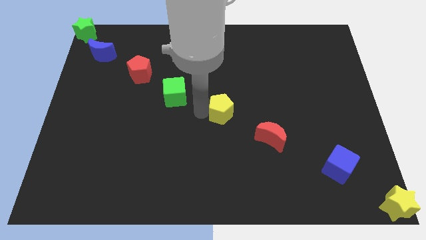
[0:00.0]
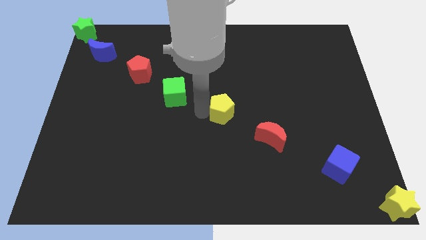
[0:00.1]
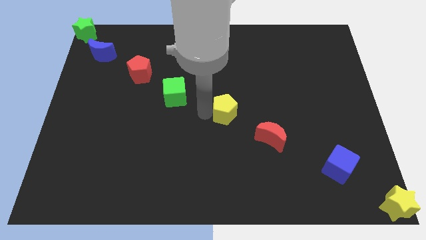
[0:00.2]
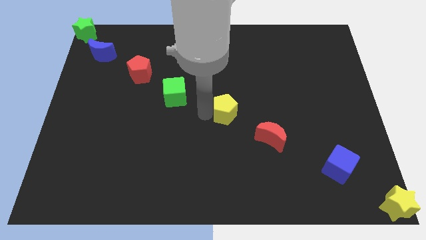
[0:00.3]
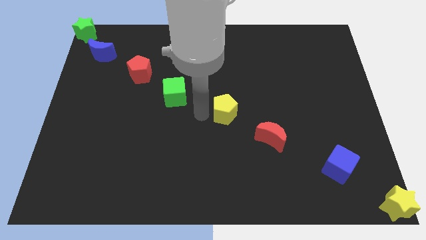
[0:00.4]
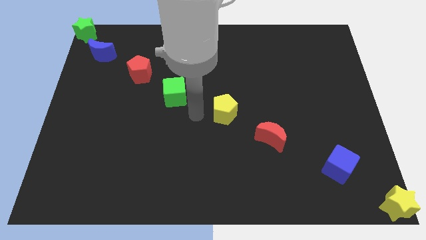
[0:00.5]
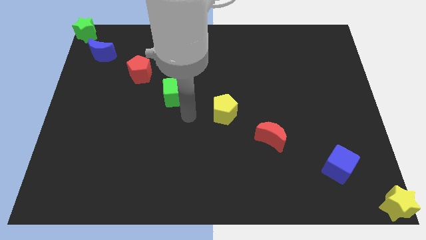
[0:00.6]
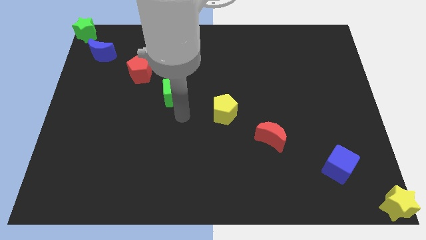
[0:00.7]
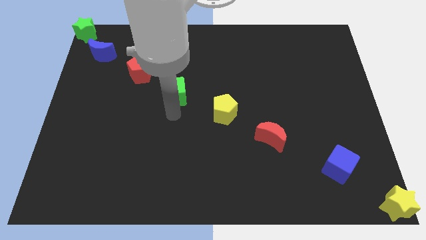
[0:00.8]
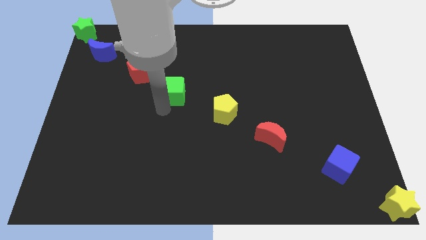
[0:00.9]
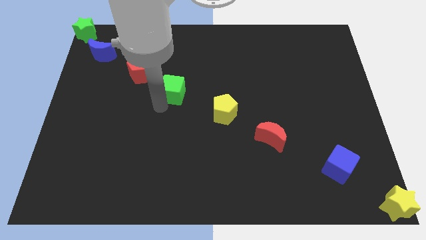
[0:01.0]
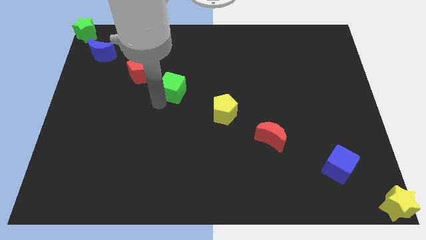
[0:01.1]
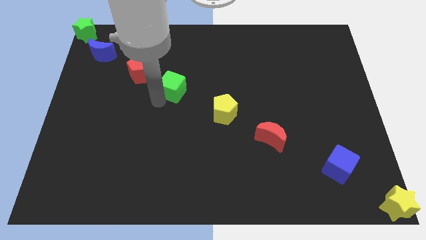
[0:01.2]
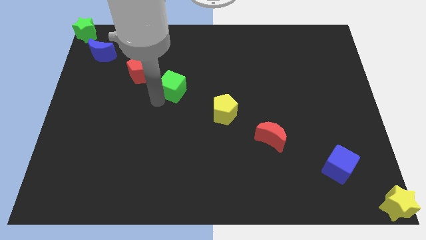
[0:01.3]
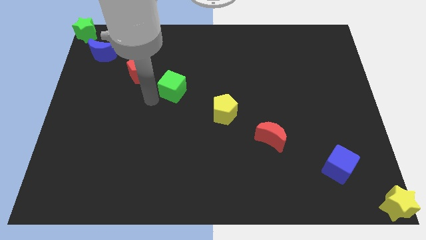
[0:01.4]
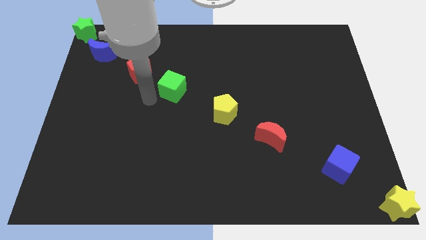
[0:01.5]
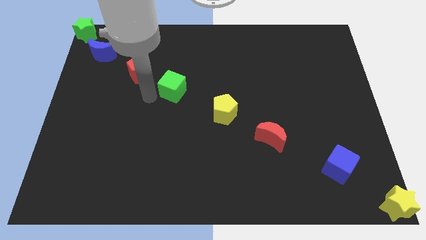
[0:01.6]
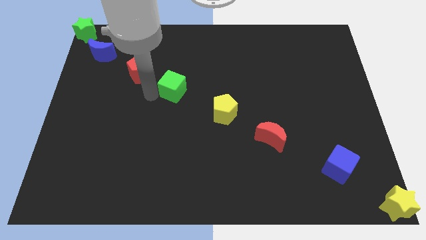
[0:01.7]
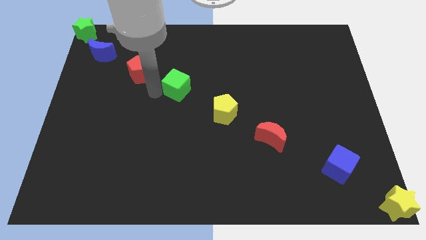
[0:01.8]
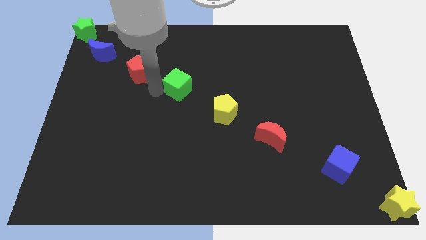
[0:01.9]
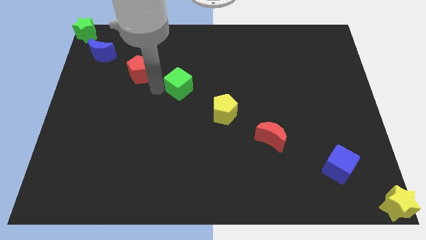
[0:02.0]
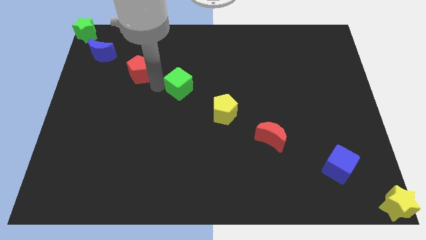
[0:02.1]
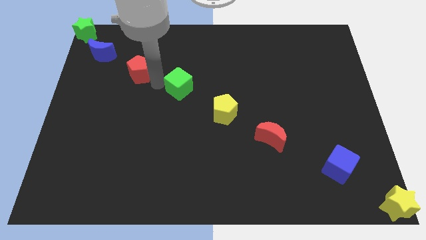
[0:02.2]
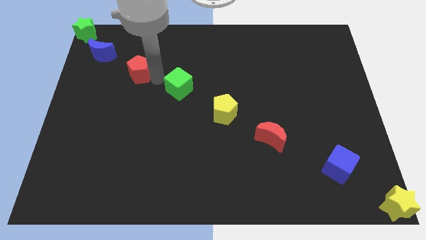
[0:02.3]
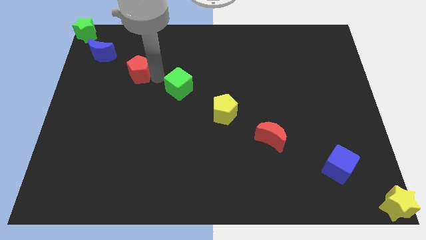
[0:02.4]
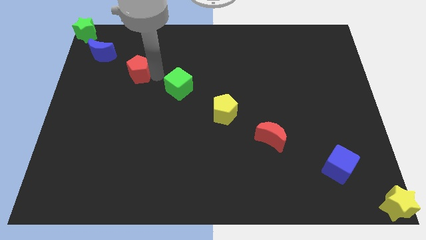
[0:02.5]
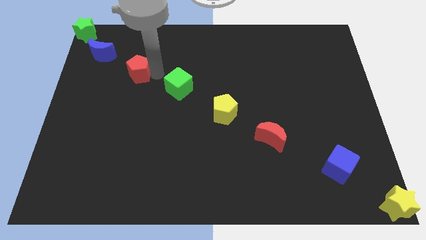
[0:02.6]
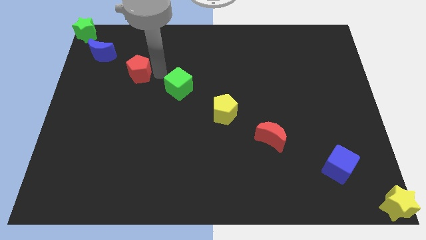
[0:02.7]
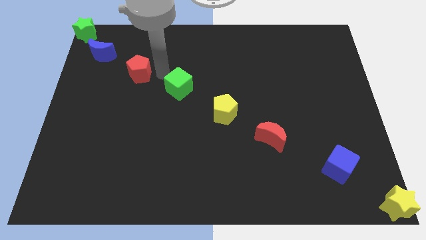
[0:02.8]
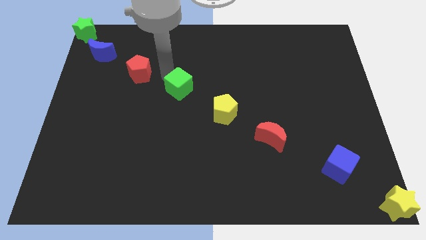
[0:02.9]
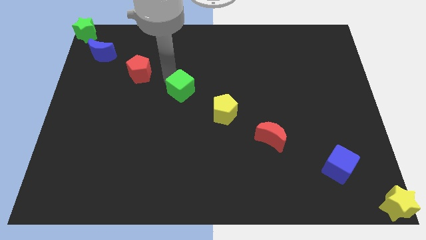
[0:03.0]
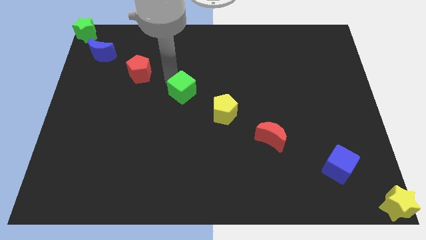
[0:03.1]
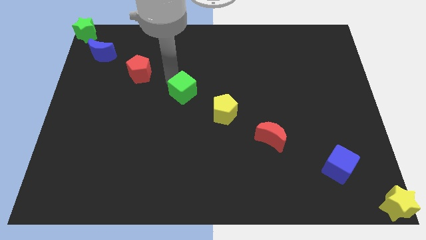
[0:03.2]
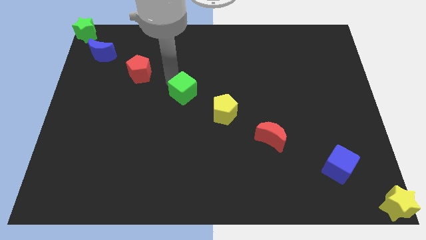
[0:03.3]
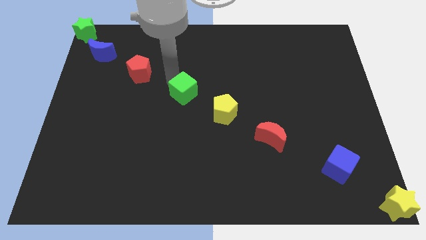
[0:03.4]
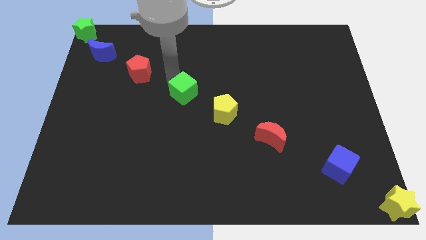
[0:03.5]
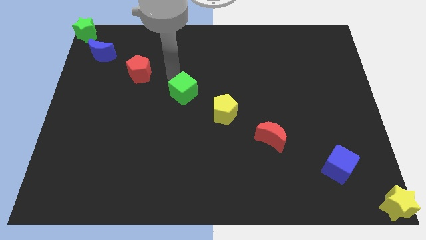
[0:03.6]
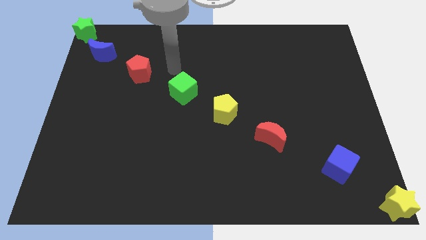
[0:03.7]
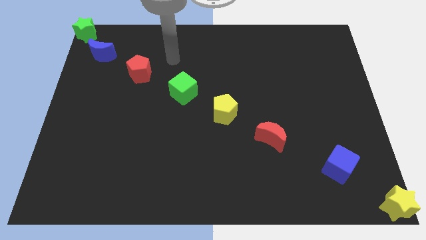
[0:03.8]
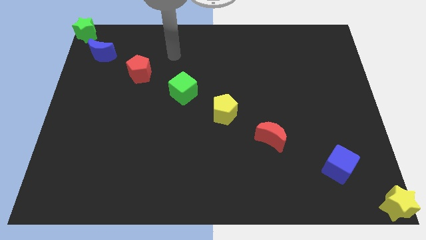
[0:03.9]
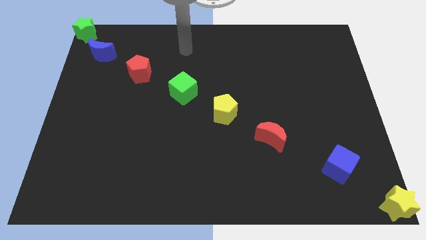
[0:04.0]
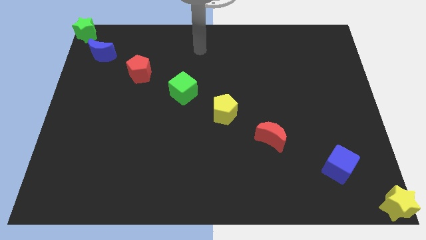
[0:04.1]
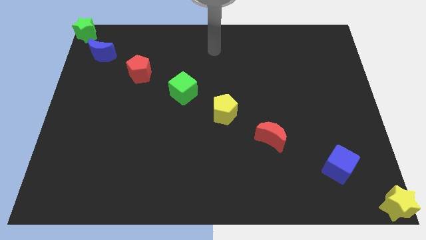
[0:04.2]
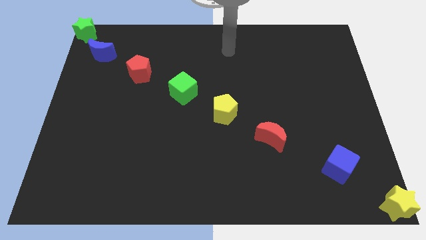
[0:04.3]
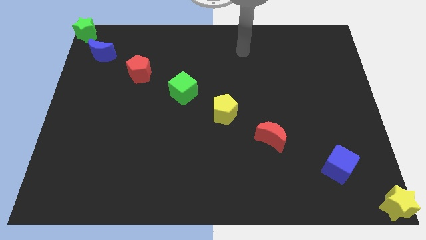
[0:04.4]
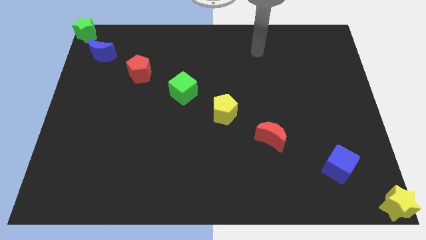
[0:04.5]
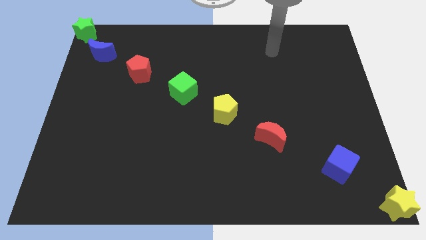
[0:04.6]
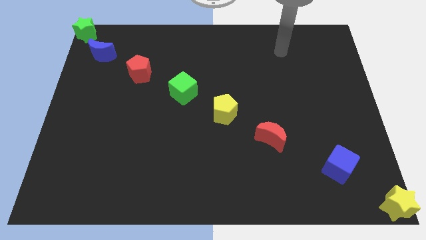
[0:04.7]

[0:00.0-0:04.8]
adjust the yellow pentagon and the green cube in a diagonal line

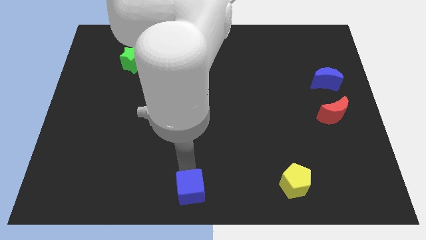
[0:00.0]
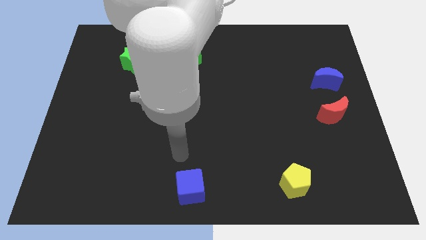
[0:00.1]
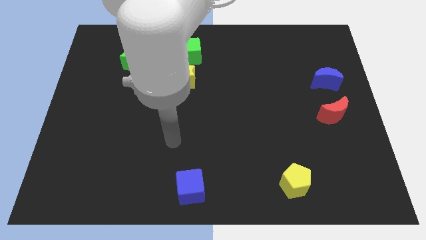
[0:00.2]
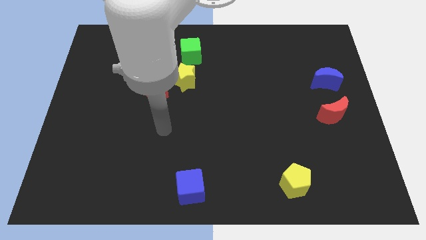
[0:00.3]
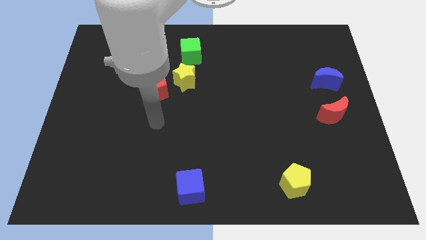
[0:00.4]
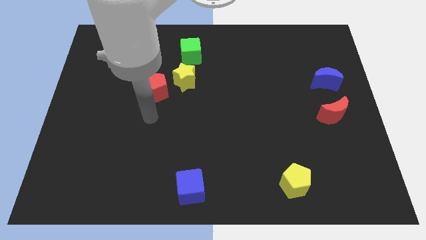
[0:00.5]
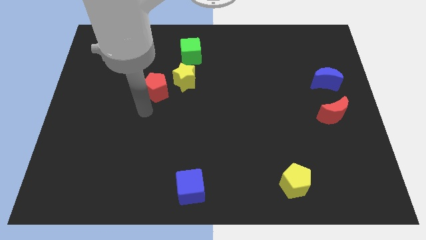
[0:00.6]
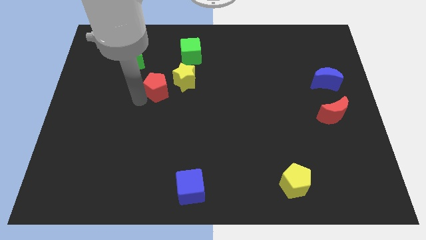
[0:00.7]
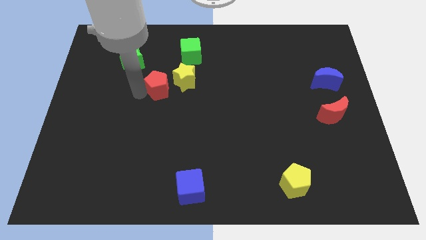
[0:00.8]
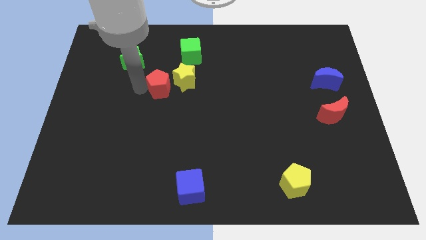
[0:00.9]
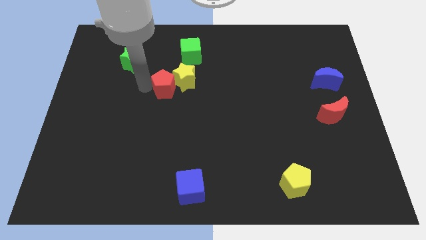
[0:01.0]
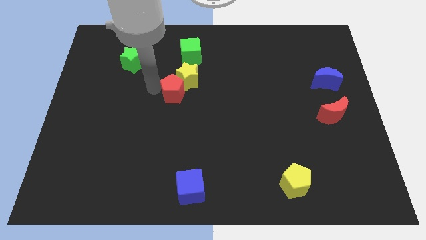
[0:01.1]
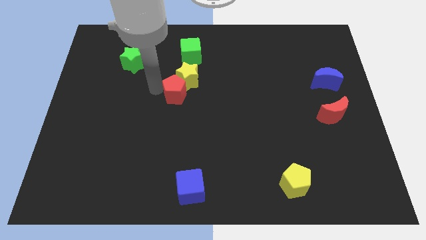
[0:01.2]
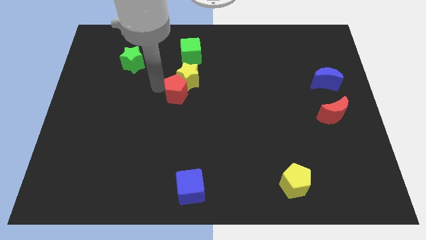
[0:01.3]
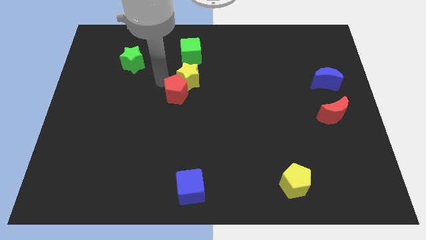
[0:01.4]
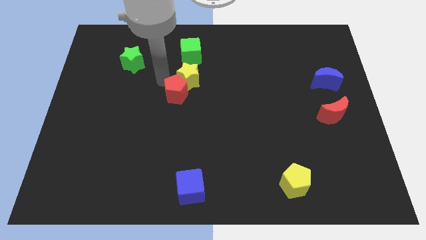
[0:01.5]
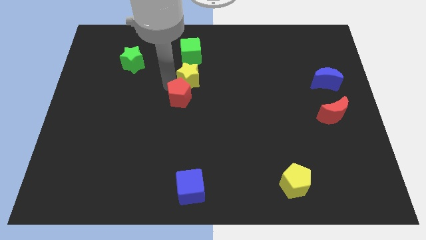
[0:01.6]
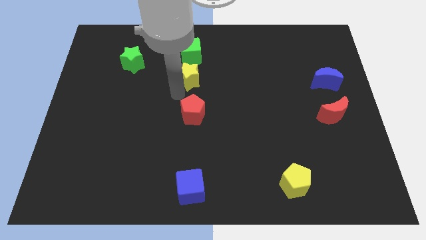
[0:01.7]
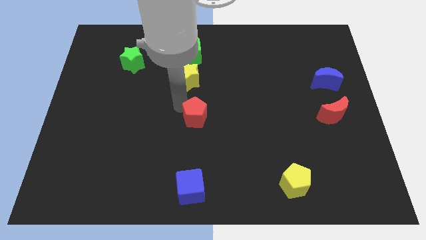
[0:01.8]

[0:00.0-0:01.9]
move the red pentagon to the bottom of the yellow star

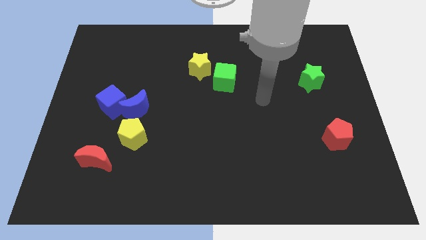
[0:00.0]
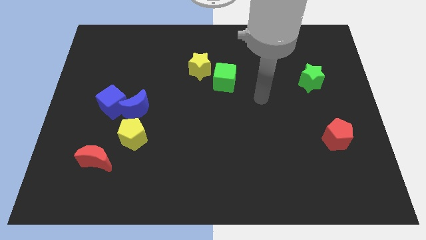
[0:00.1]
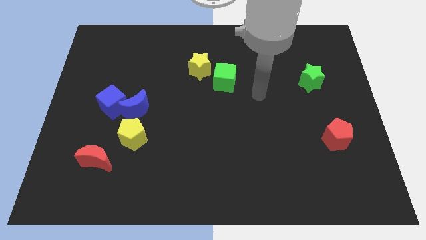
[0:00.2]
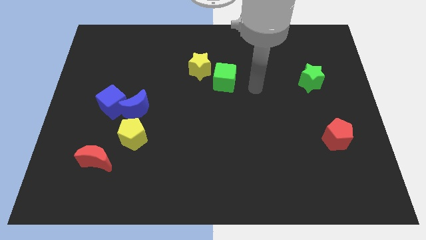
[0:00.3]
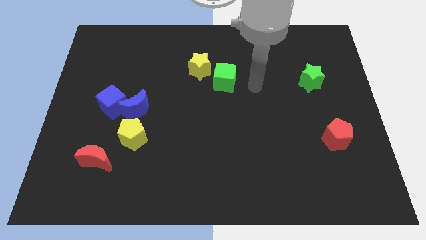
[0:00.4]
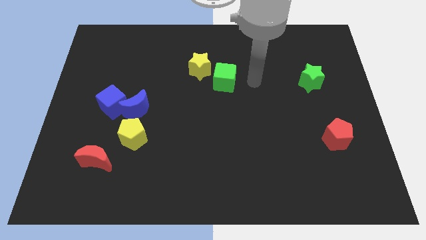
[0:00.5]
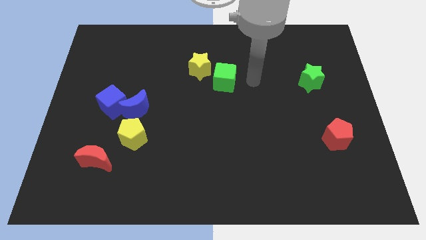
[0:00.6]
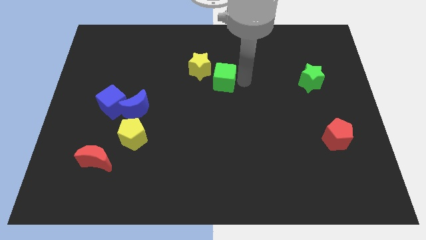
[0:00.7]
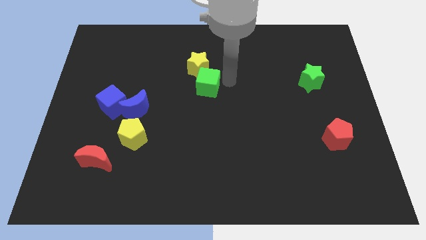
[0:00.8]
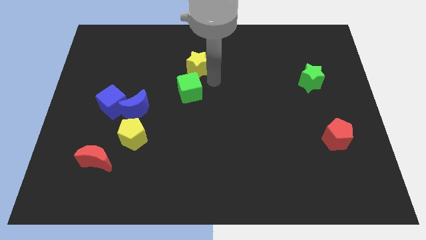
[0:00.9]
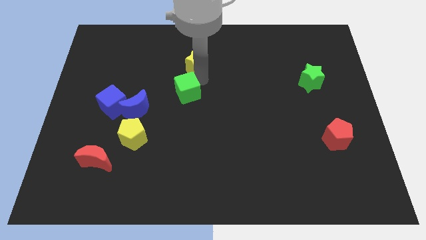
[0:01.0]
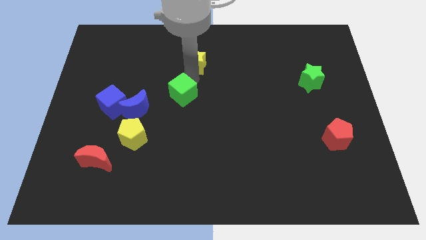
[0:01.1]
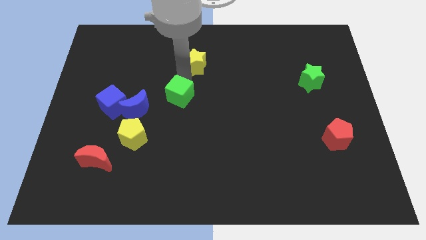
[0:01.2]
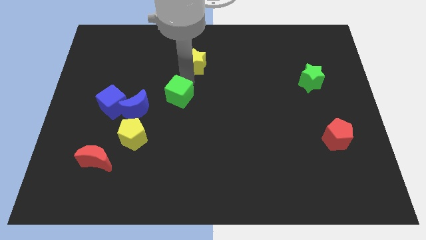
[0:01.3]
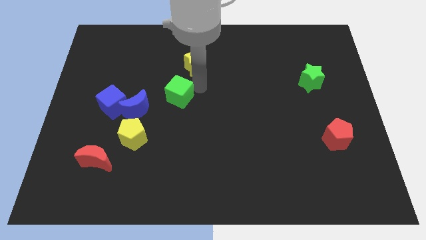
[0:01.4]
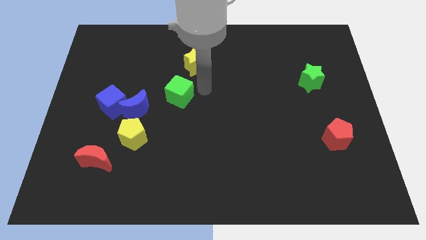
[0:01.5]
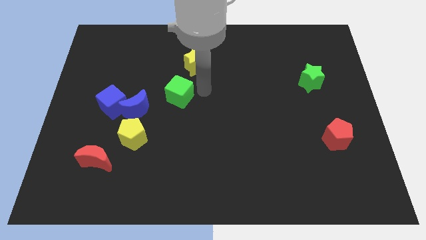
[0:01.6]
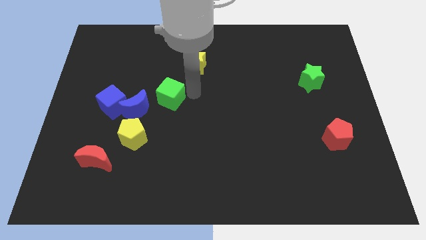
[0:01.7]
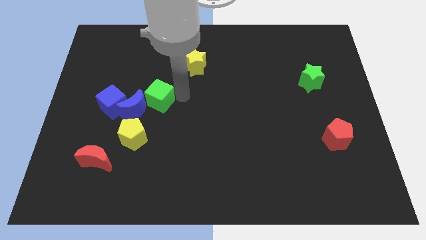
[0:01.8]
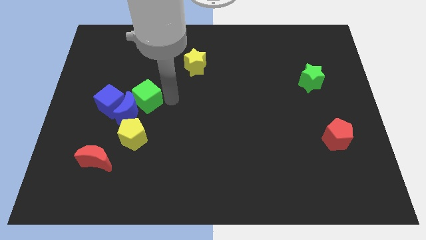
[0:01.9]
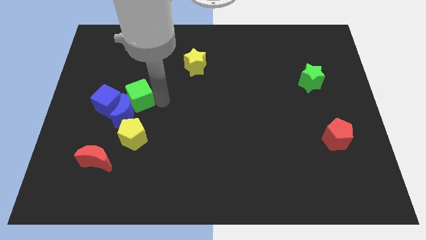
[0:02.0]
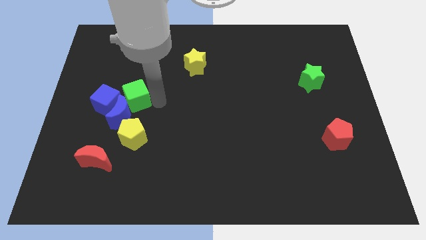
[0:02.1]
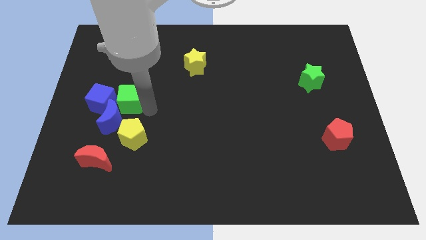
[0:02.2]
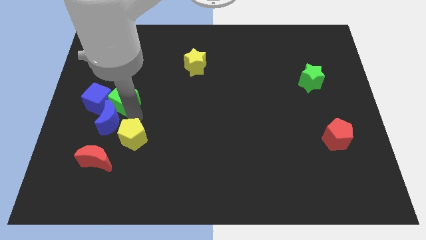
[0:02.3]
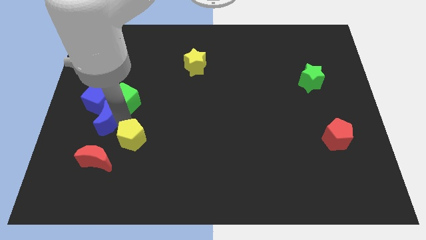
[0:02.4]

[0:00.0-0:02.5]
touch the blue cube with the help of green cube
